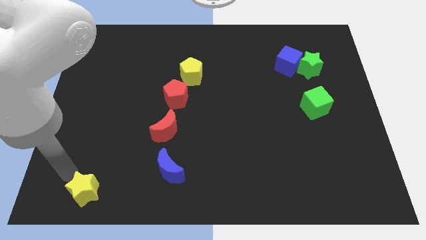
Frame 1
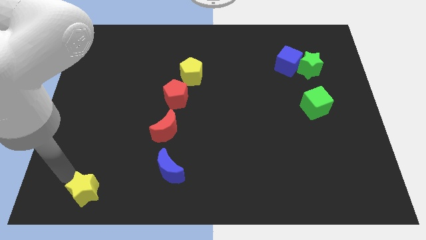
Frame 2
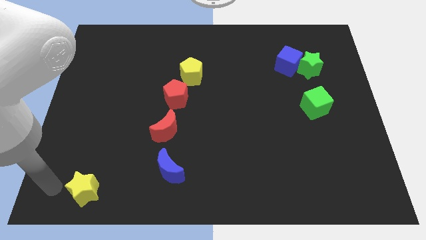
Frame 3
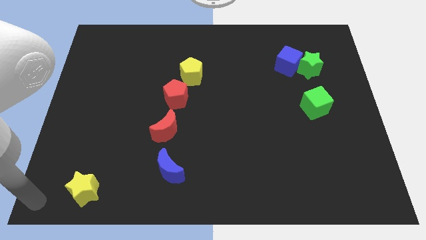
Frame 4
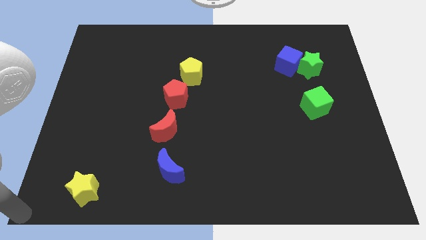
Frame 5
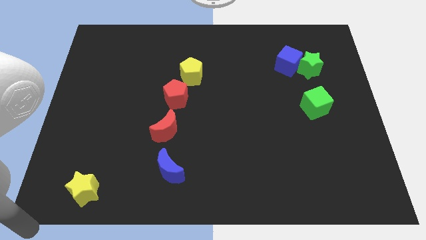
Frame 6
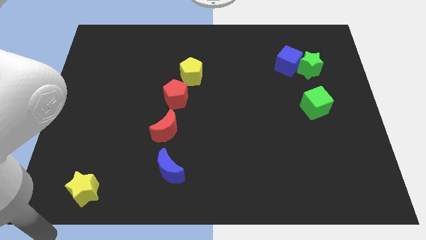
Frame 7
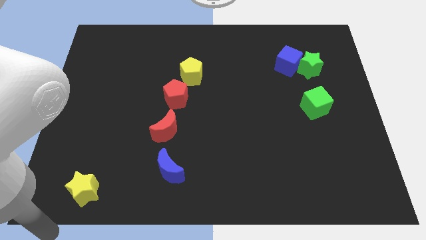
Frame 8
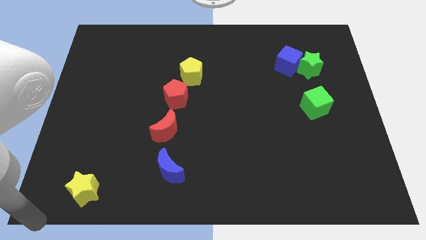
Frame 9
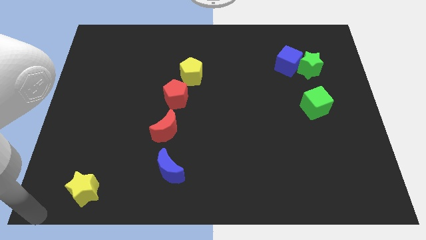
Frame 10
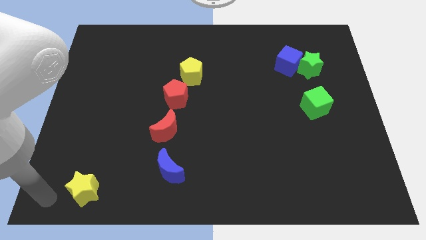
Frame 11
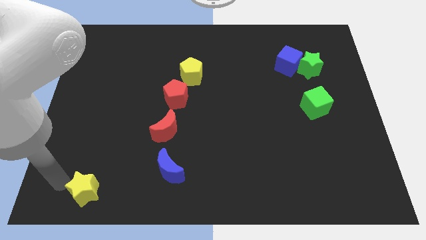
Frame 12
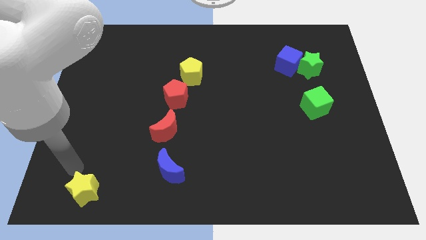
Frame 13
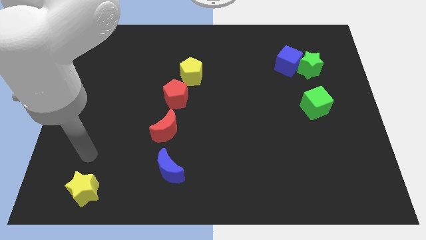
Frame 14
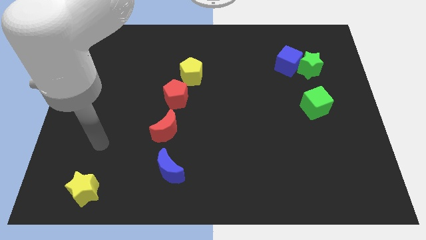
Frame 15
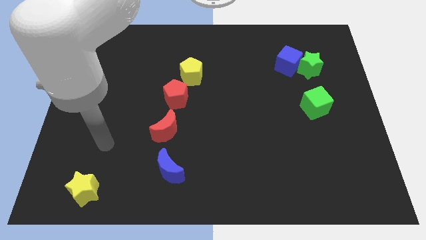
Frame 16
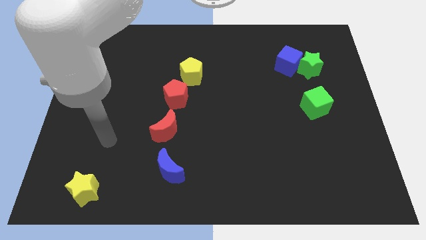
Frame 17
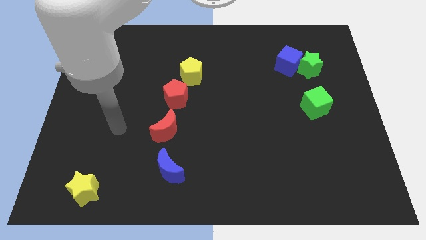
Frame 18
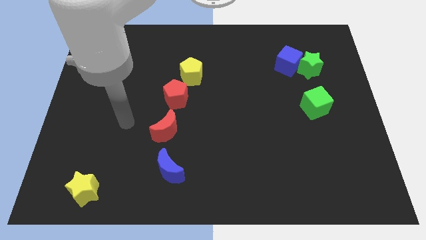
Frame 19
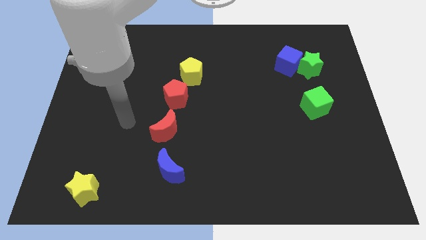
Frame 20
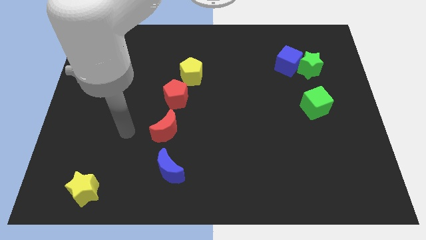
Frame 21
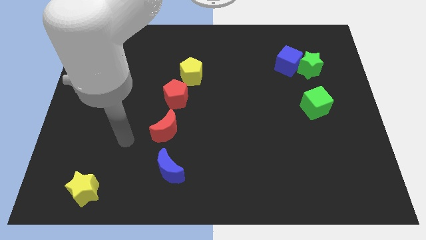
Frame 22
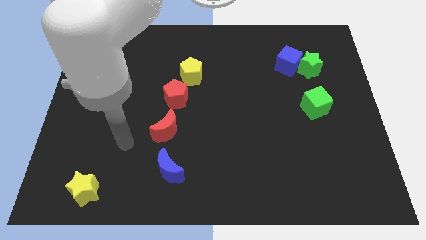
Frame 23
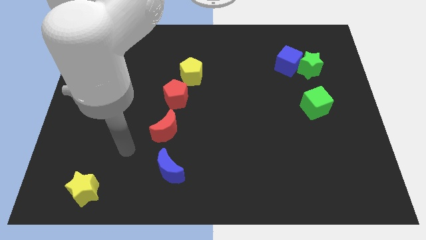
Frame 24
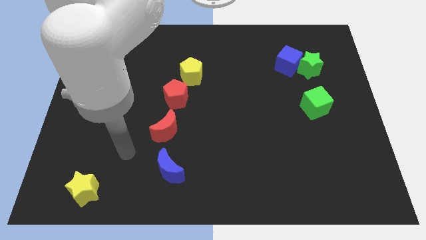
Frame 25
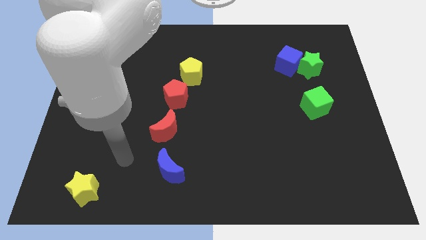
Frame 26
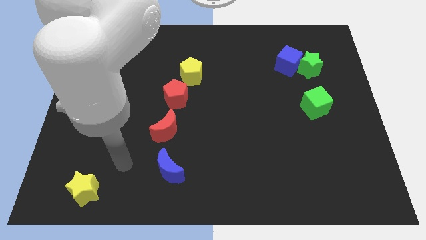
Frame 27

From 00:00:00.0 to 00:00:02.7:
move the arm away from the yellow star

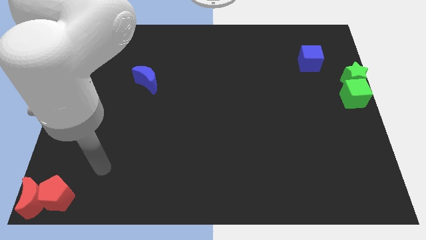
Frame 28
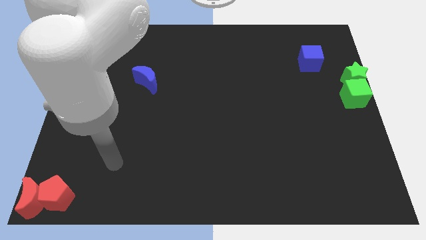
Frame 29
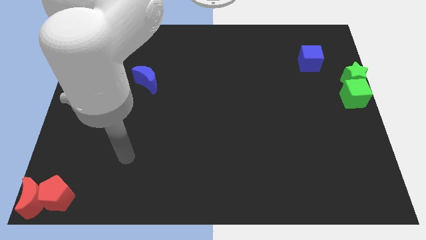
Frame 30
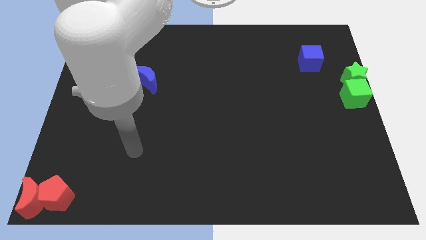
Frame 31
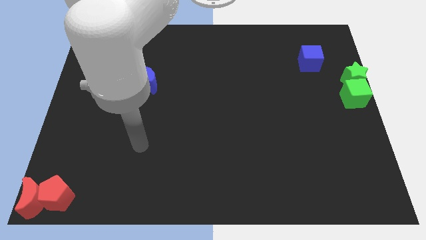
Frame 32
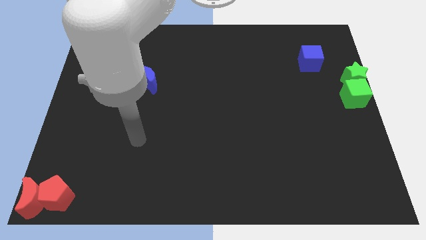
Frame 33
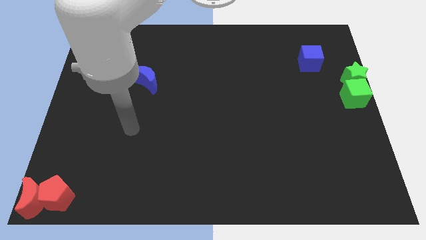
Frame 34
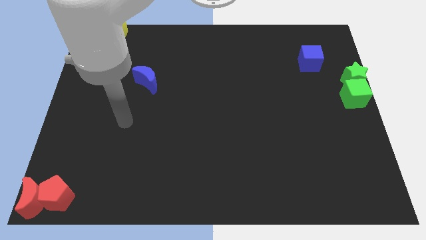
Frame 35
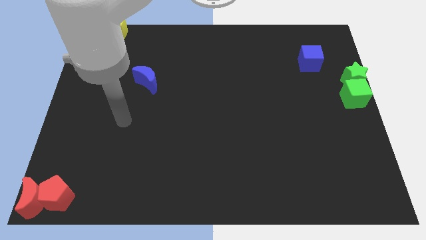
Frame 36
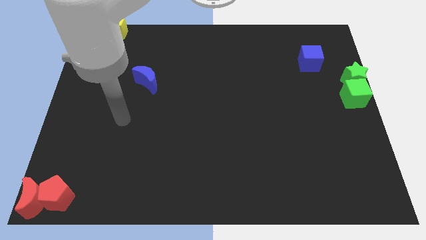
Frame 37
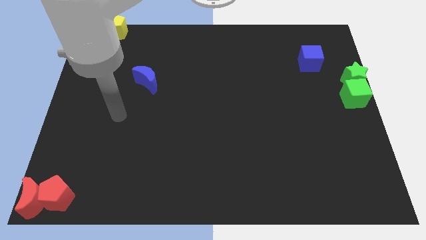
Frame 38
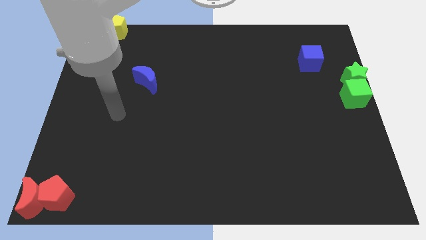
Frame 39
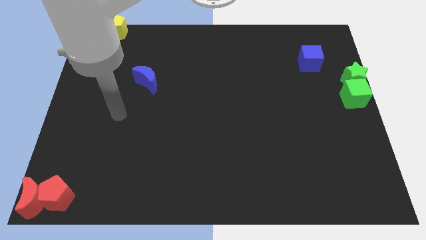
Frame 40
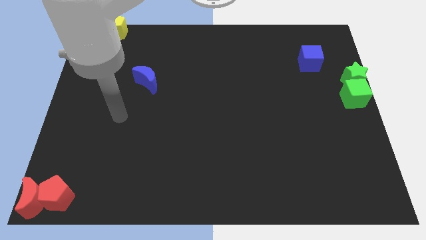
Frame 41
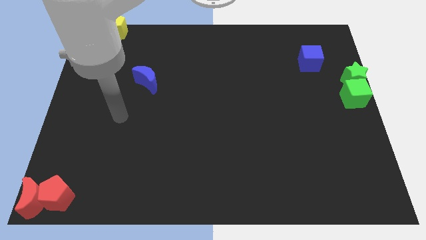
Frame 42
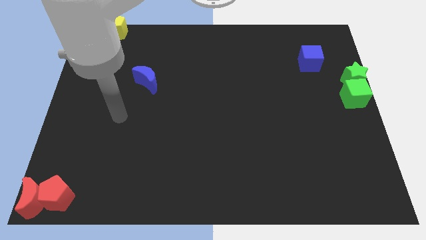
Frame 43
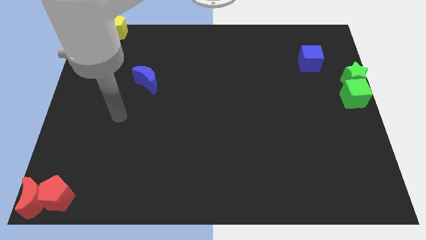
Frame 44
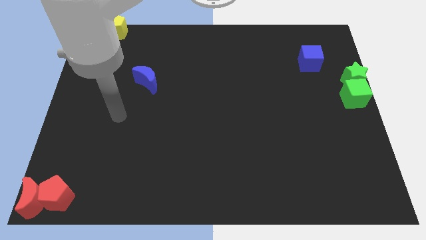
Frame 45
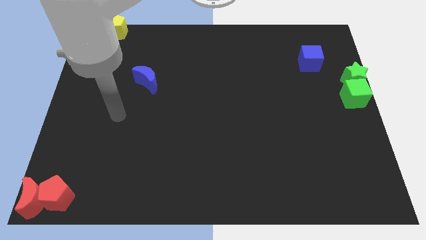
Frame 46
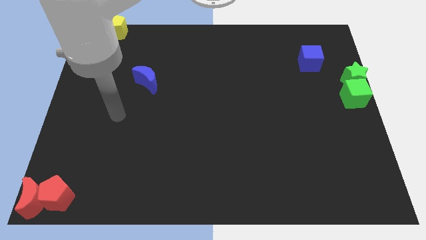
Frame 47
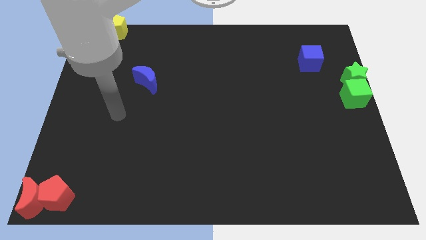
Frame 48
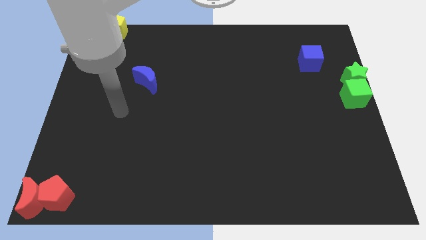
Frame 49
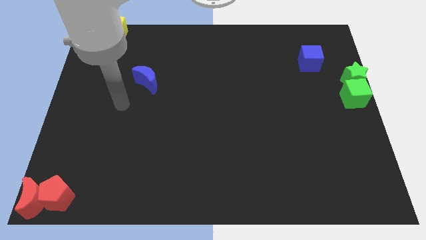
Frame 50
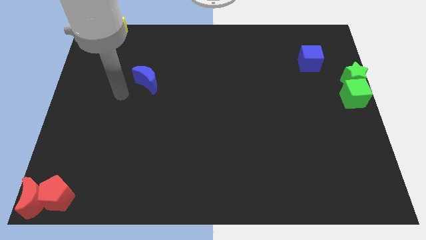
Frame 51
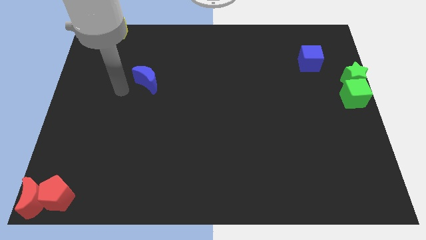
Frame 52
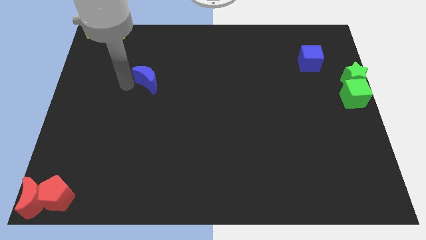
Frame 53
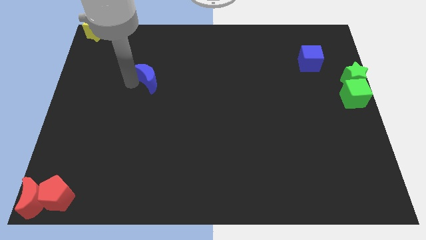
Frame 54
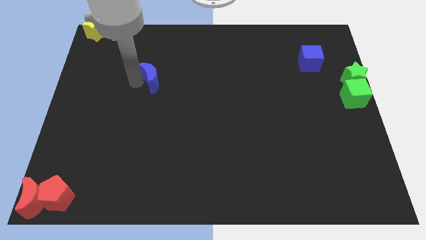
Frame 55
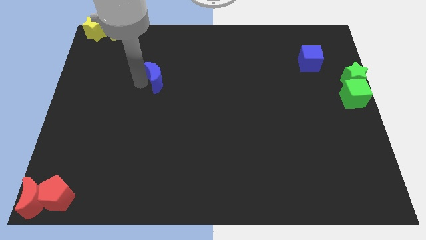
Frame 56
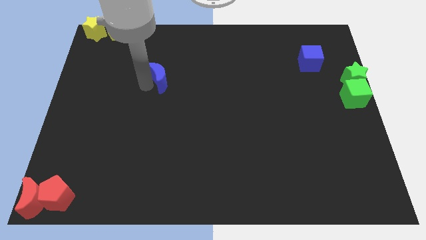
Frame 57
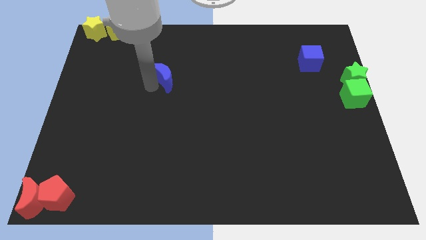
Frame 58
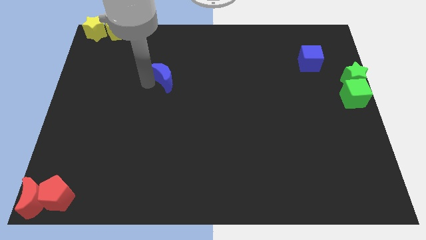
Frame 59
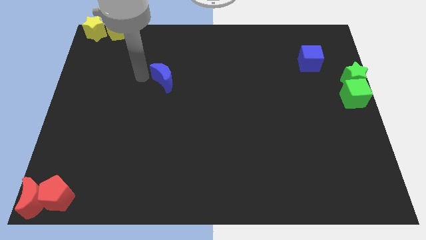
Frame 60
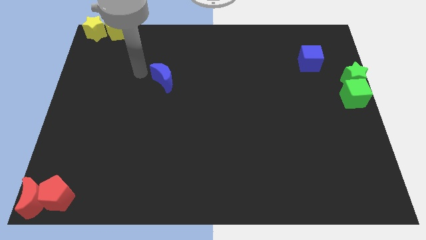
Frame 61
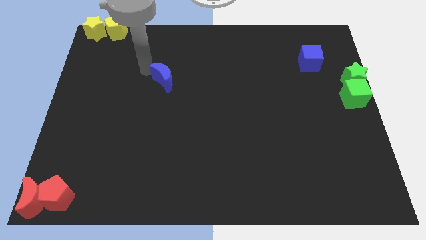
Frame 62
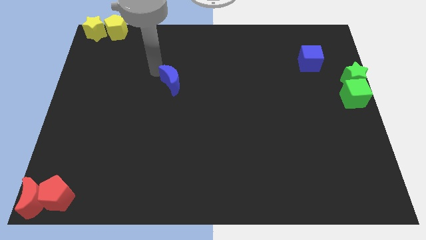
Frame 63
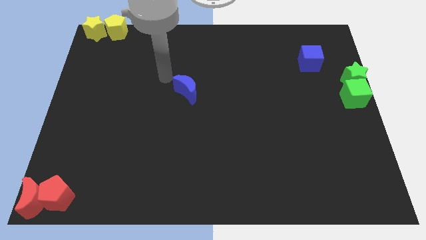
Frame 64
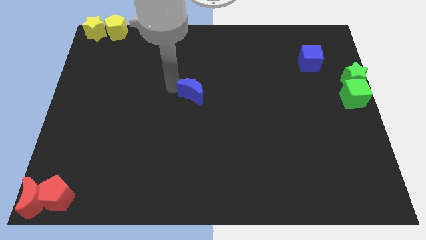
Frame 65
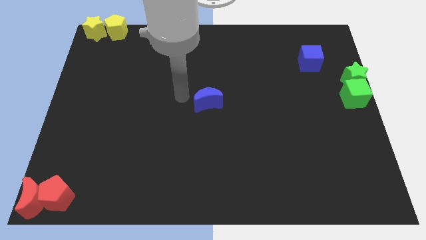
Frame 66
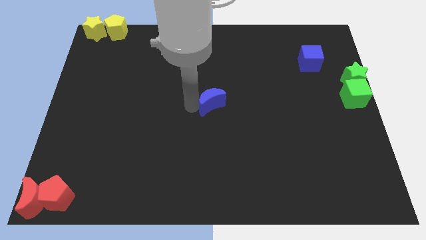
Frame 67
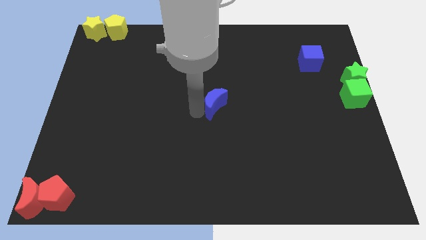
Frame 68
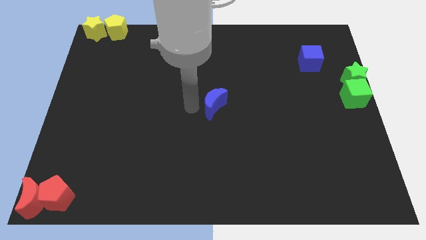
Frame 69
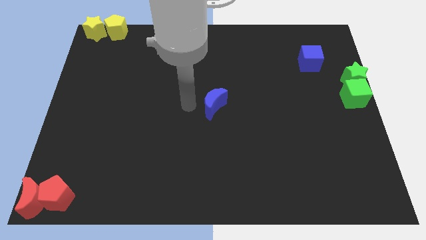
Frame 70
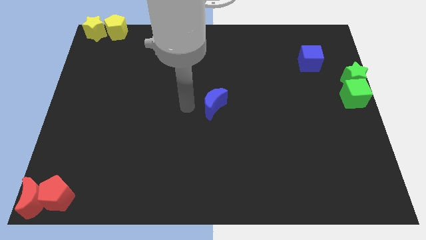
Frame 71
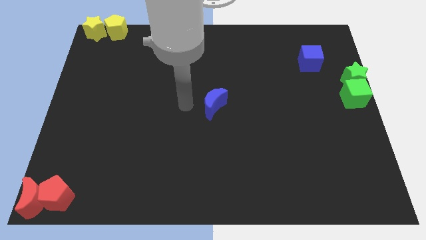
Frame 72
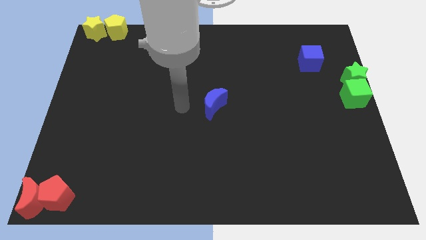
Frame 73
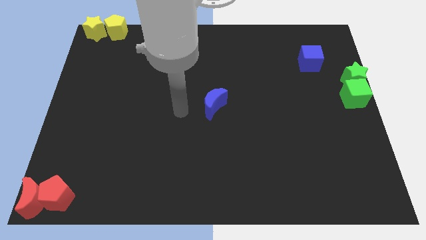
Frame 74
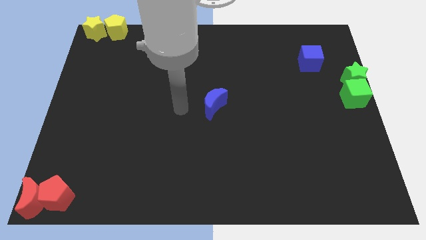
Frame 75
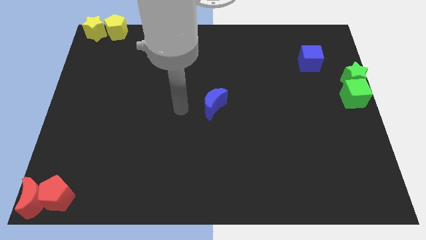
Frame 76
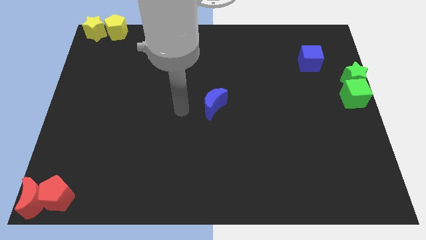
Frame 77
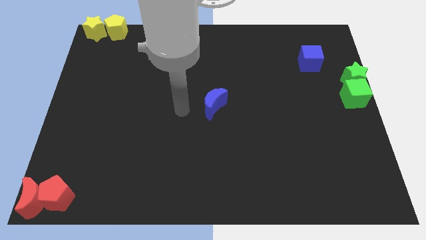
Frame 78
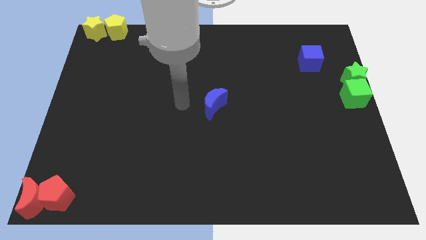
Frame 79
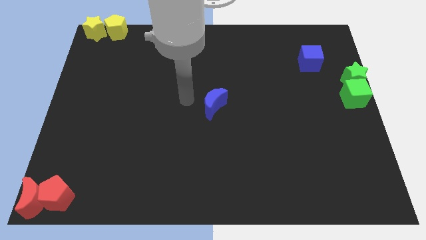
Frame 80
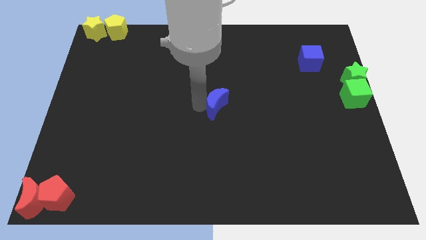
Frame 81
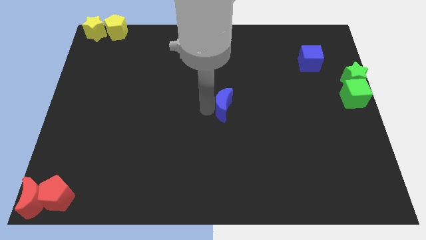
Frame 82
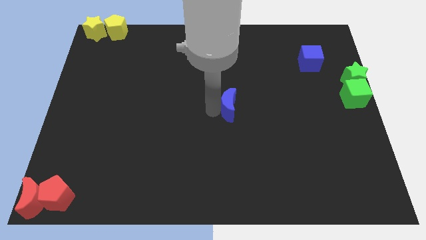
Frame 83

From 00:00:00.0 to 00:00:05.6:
place the blue crescent to the center of the board

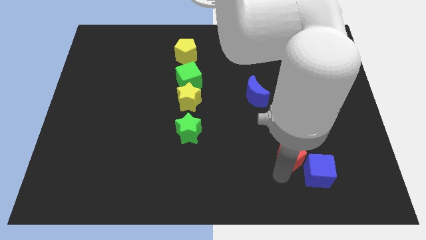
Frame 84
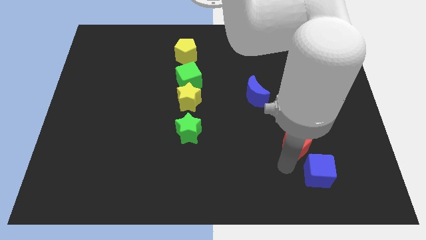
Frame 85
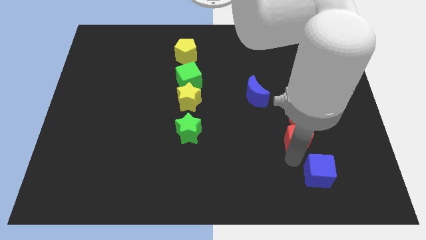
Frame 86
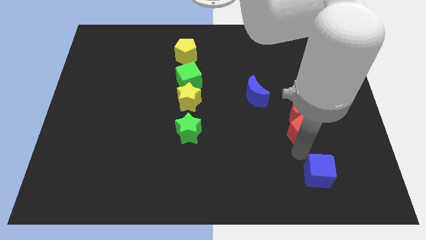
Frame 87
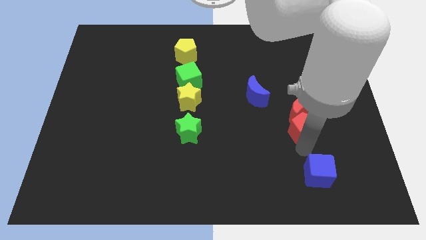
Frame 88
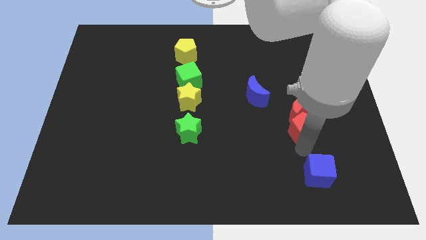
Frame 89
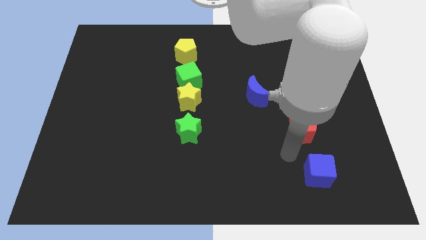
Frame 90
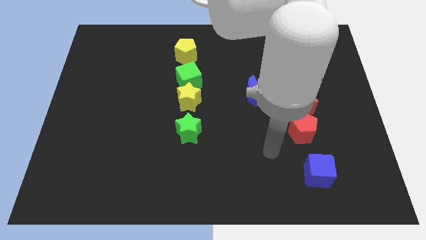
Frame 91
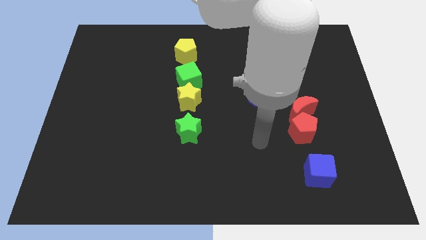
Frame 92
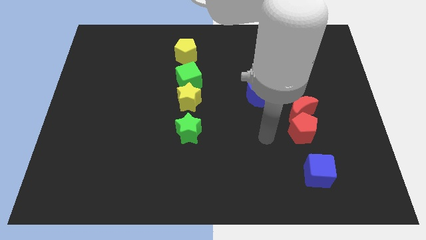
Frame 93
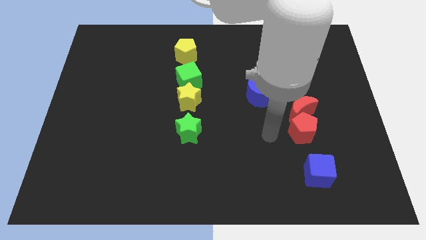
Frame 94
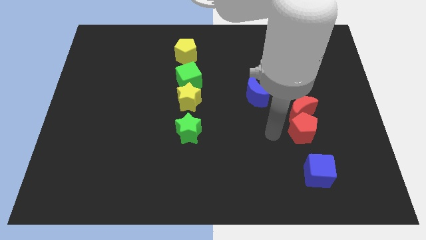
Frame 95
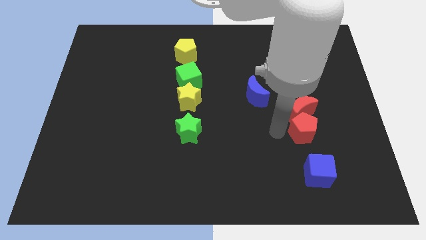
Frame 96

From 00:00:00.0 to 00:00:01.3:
move the red pentagon to the bottom side of the red crescent
